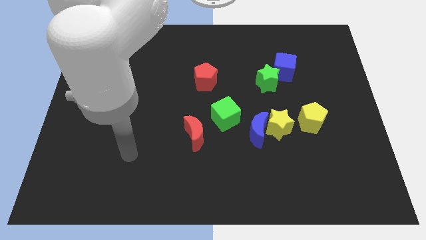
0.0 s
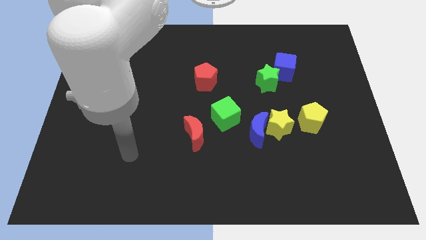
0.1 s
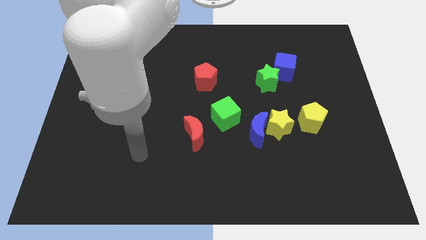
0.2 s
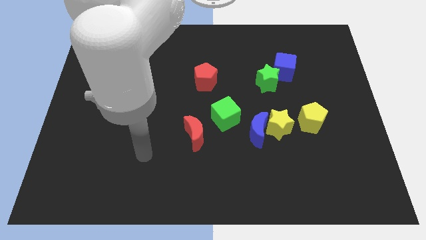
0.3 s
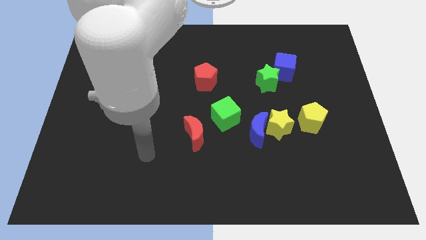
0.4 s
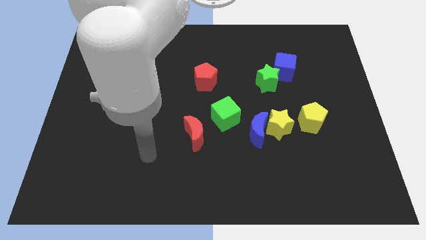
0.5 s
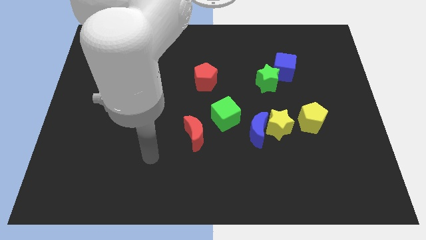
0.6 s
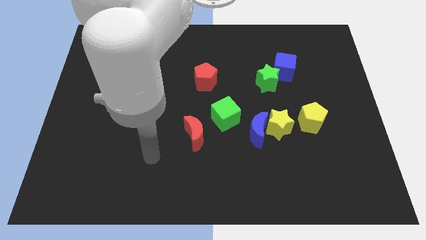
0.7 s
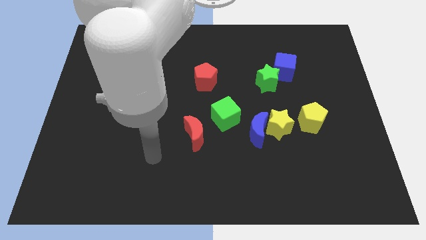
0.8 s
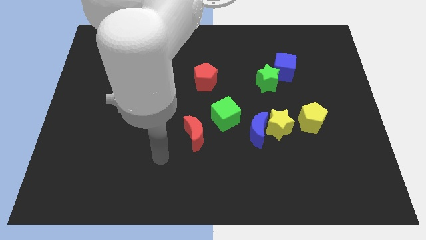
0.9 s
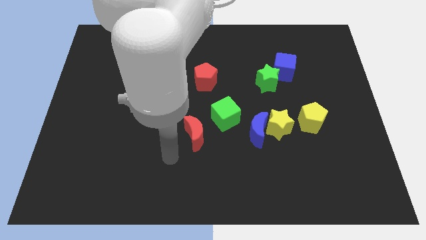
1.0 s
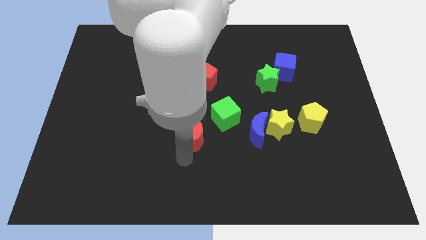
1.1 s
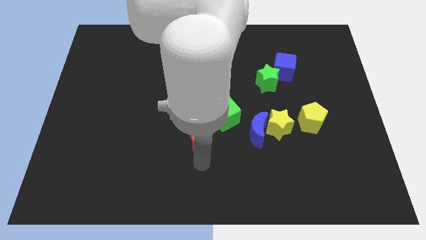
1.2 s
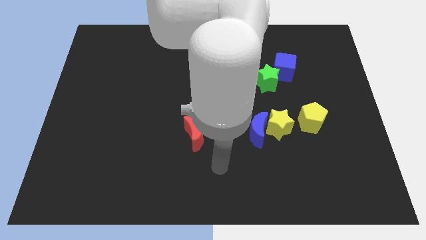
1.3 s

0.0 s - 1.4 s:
point your arm at the bottom side of the red crescent

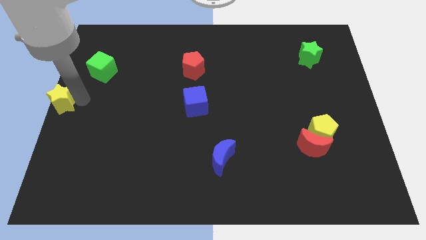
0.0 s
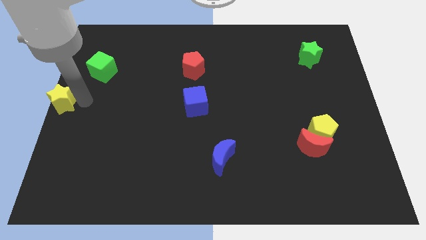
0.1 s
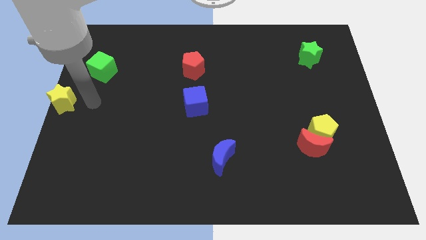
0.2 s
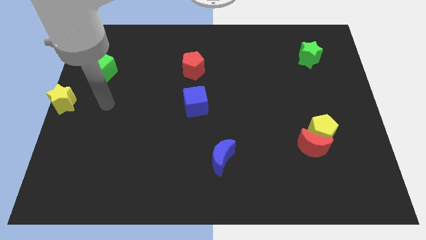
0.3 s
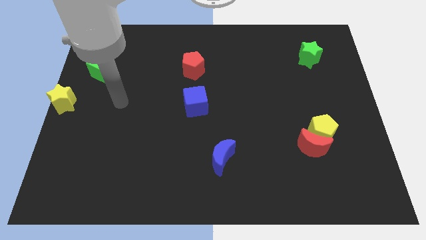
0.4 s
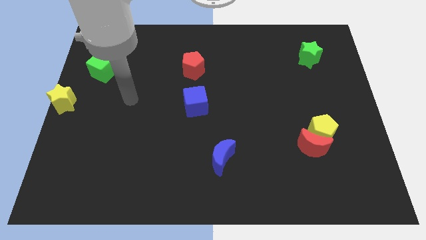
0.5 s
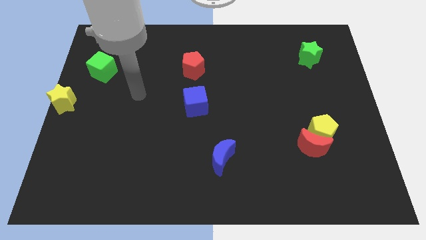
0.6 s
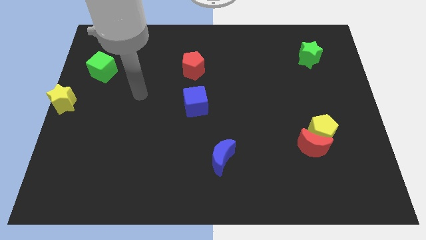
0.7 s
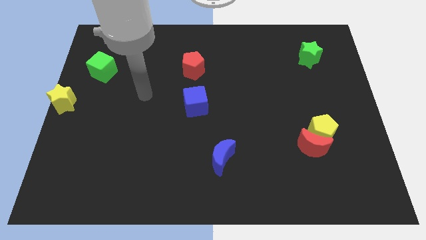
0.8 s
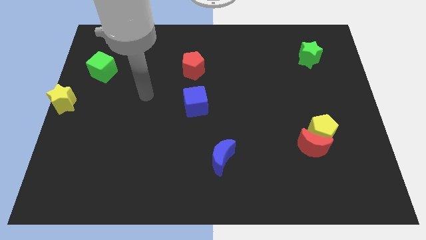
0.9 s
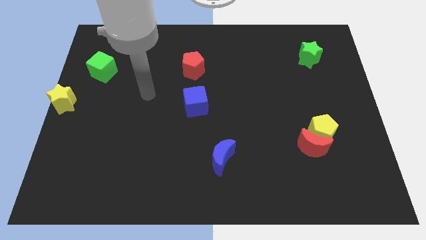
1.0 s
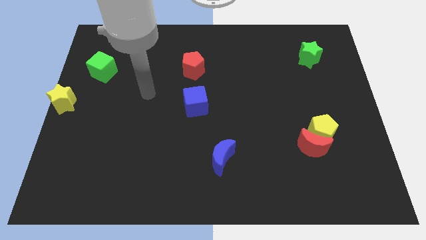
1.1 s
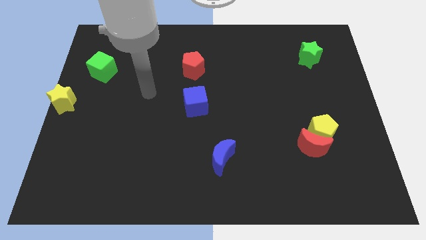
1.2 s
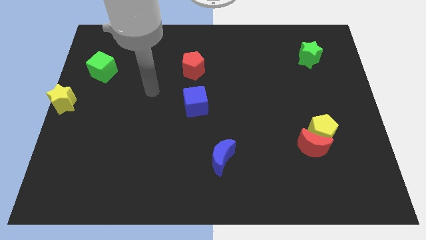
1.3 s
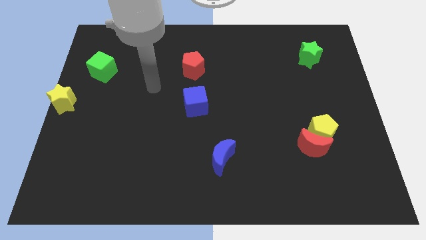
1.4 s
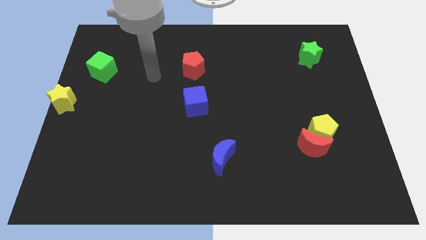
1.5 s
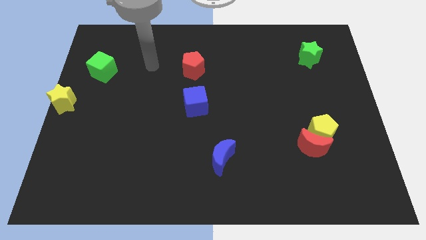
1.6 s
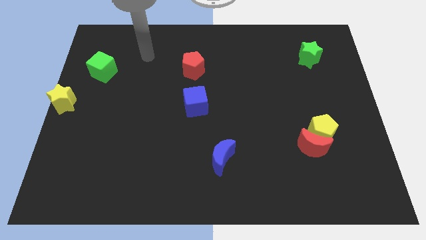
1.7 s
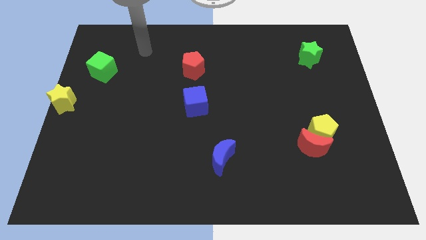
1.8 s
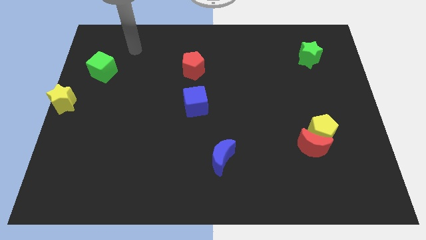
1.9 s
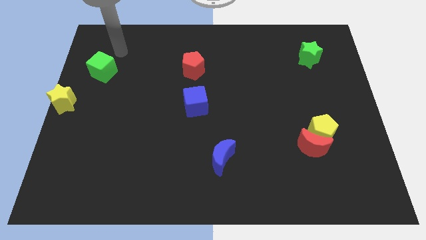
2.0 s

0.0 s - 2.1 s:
point your arm at the top of the green cube

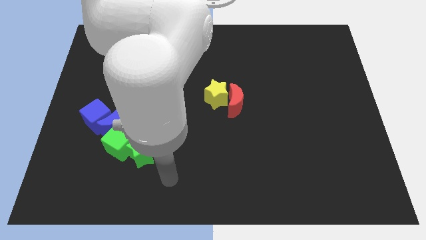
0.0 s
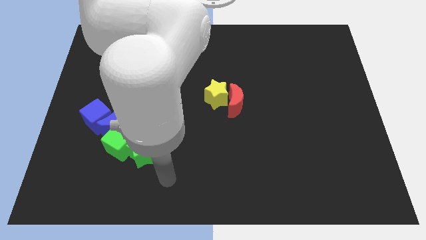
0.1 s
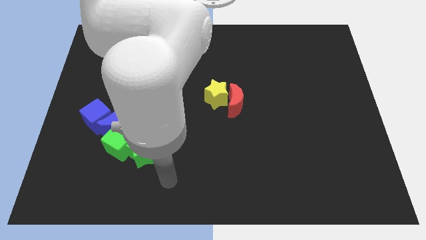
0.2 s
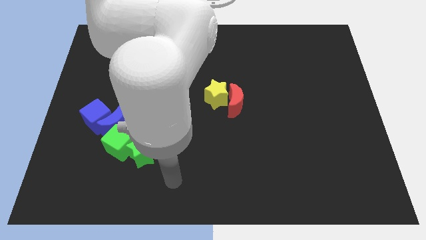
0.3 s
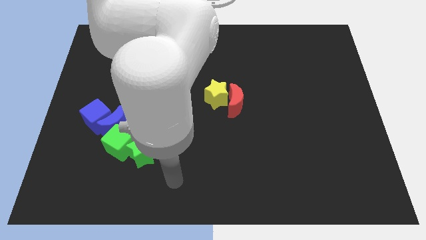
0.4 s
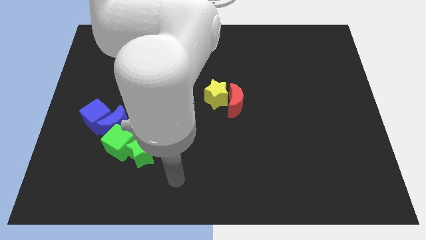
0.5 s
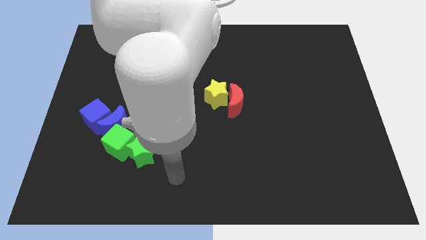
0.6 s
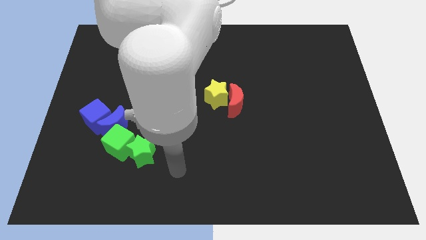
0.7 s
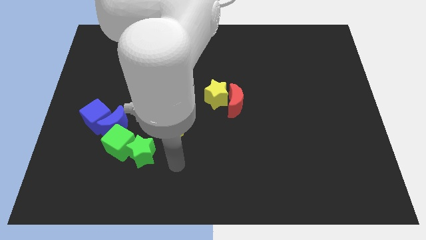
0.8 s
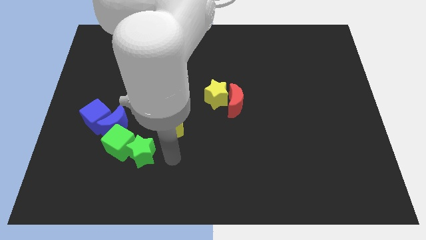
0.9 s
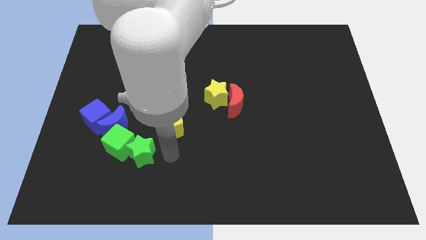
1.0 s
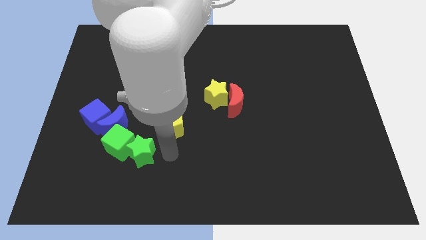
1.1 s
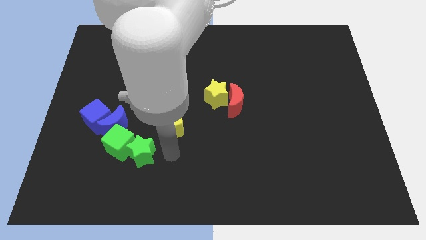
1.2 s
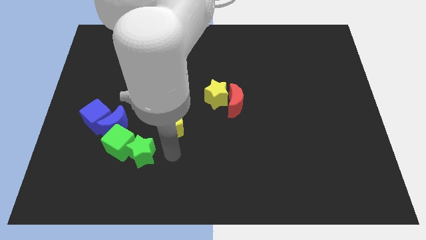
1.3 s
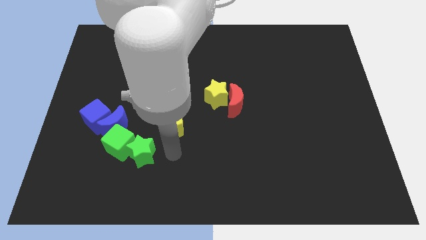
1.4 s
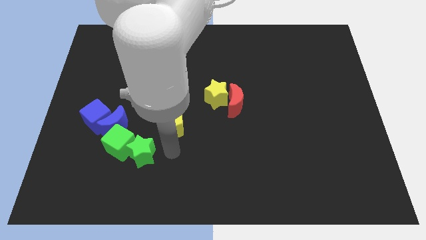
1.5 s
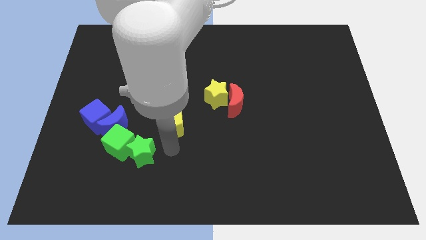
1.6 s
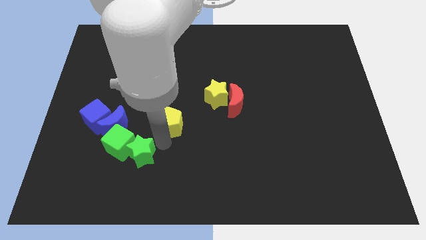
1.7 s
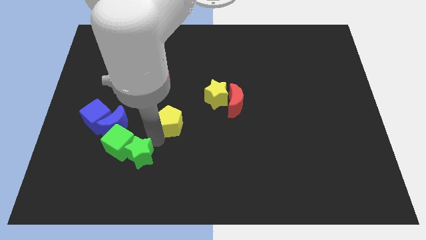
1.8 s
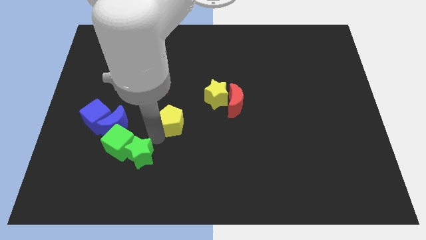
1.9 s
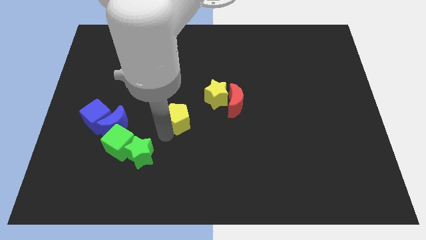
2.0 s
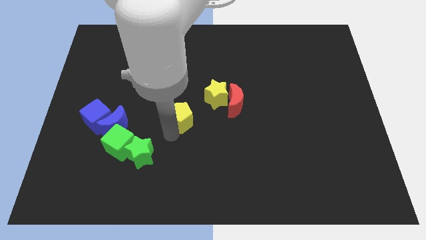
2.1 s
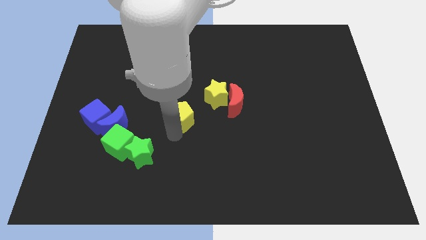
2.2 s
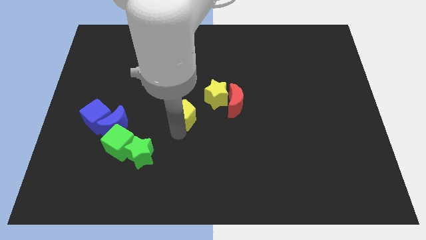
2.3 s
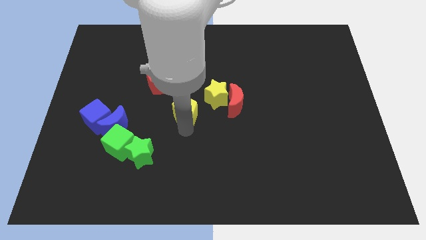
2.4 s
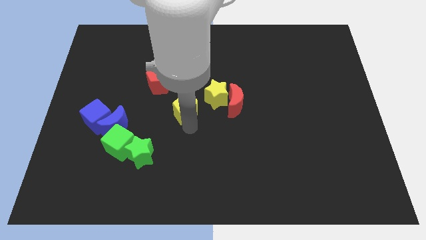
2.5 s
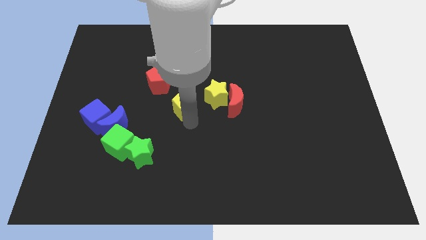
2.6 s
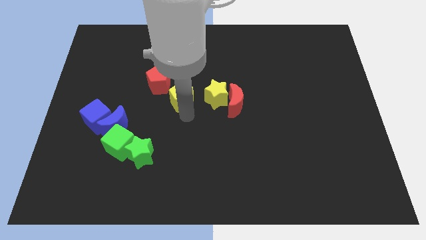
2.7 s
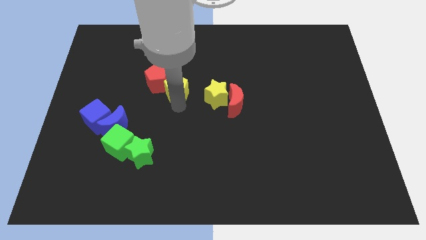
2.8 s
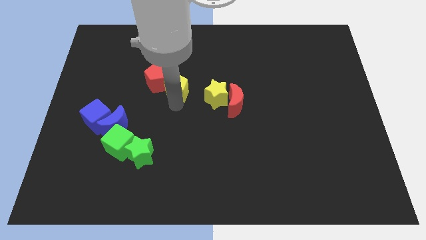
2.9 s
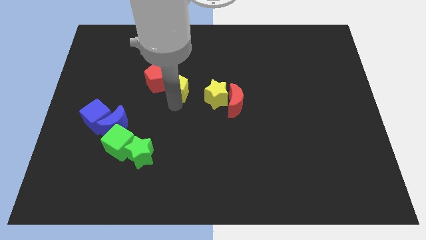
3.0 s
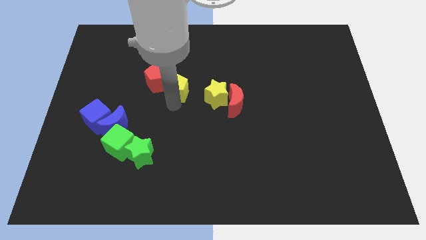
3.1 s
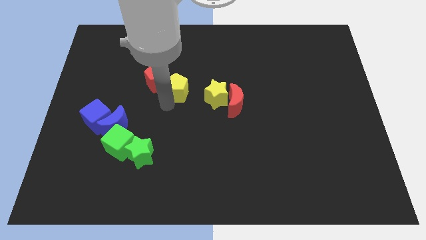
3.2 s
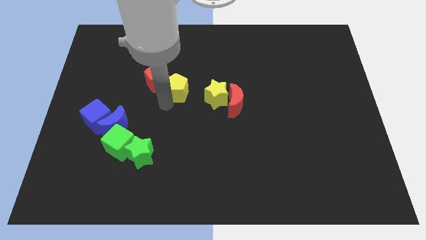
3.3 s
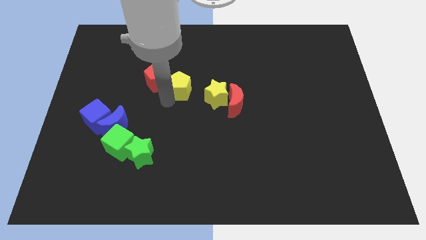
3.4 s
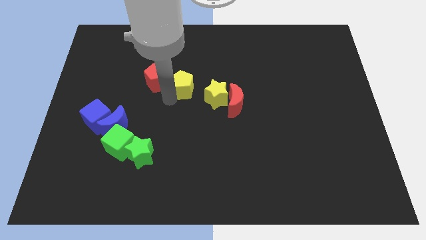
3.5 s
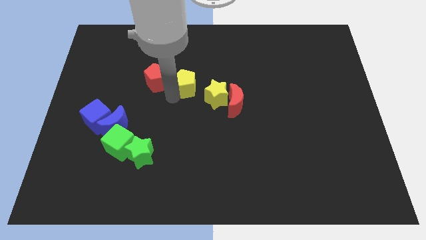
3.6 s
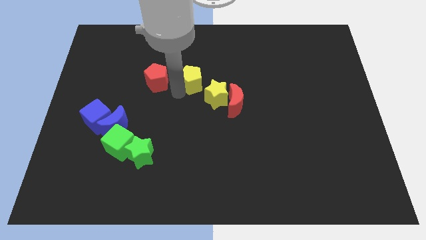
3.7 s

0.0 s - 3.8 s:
place the yellow pentagon right to the red pentagon

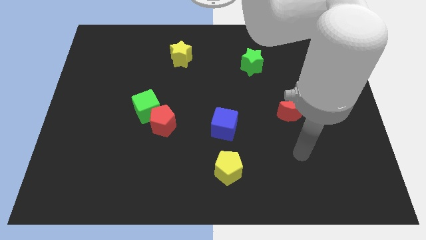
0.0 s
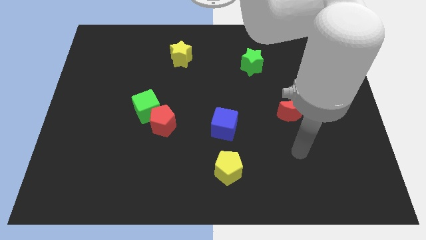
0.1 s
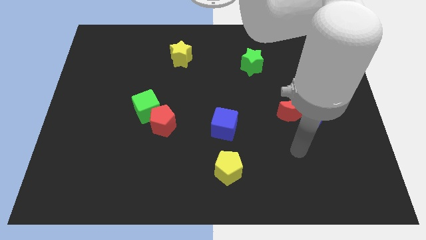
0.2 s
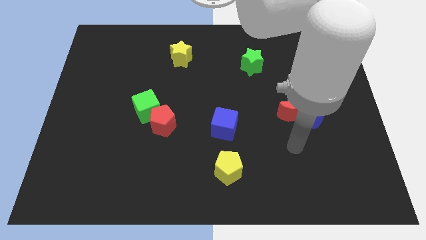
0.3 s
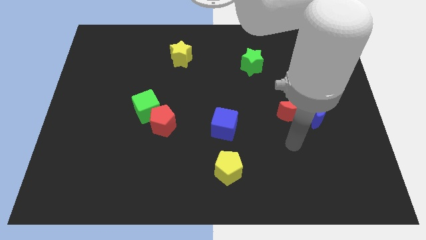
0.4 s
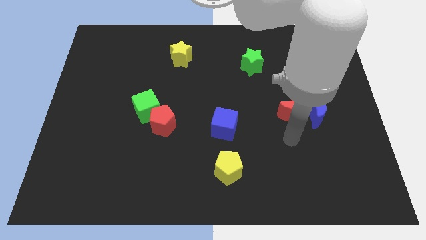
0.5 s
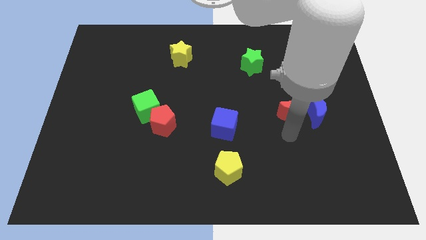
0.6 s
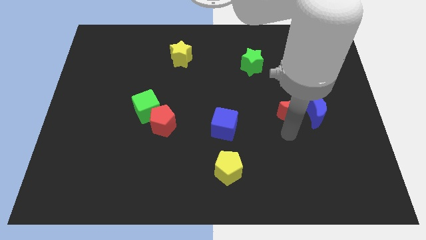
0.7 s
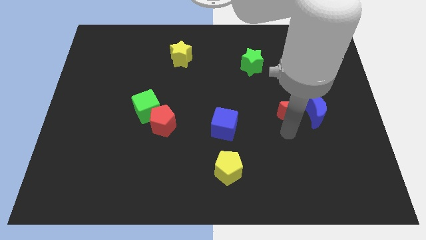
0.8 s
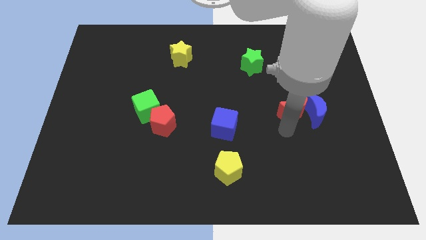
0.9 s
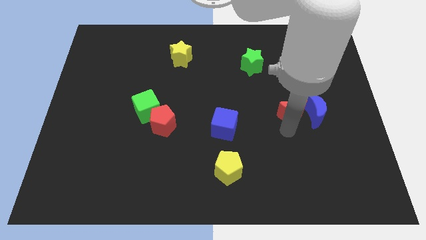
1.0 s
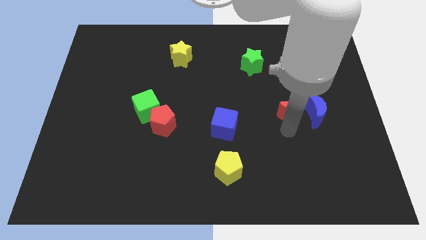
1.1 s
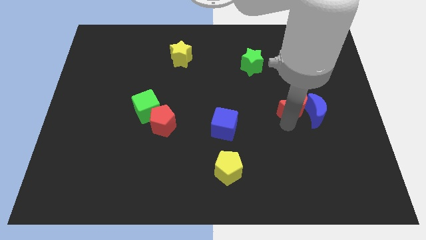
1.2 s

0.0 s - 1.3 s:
tap the red crescent

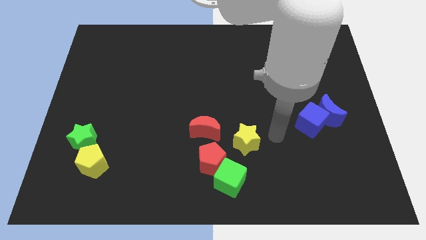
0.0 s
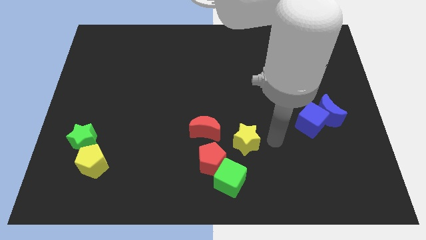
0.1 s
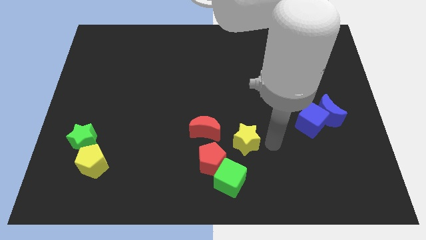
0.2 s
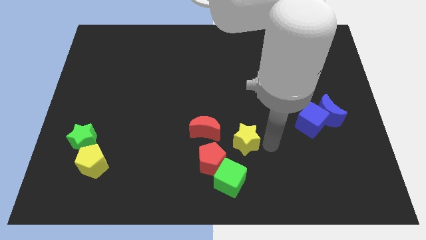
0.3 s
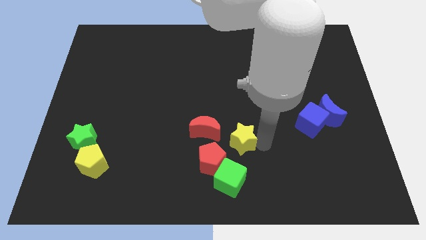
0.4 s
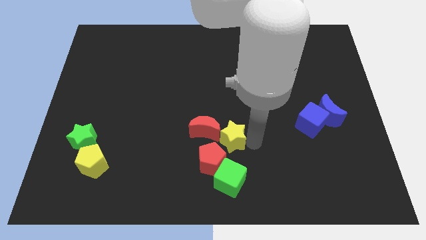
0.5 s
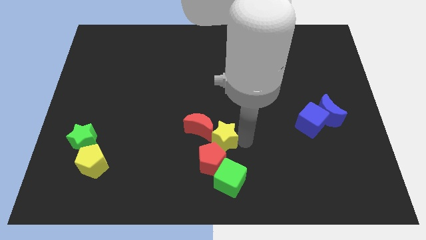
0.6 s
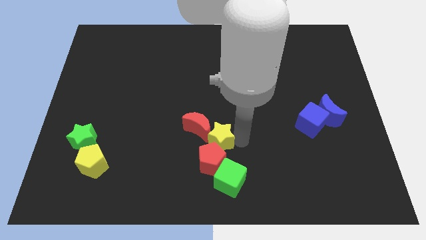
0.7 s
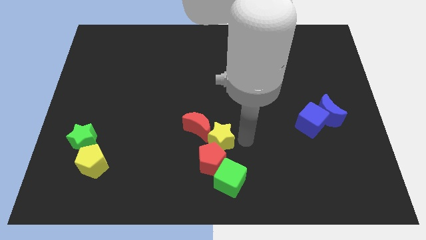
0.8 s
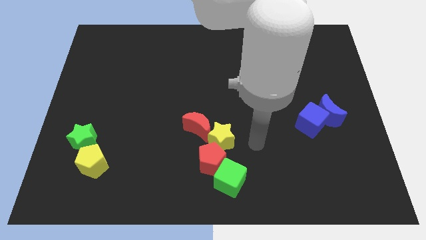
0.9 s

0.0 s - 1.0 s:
push yellow star in red moon
